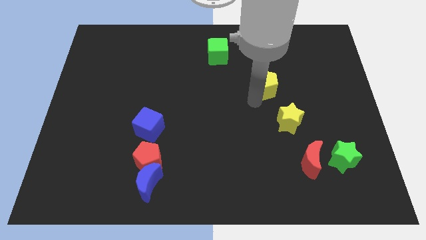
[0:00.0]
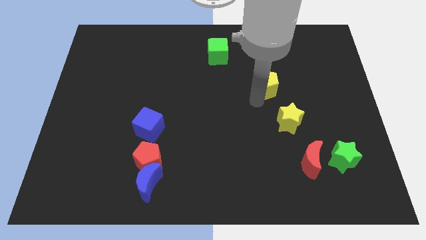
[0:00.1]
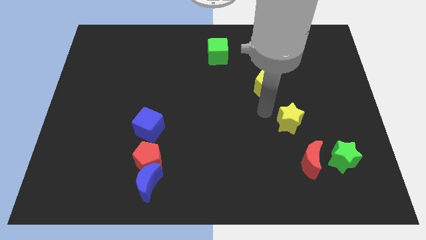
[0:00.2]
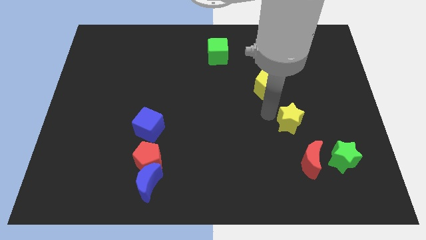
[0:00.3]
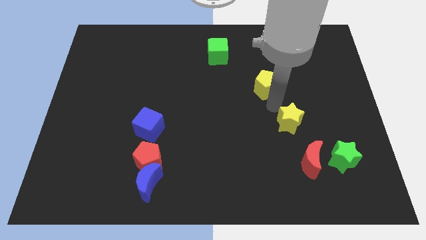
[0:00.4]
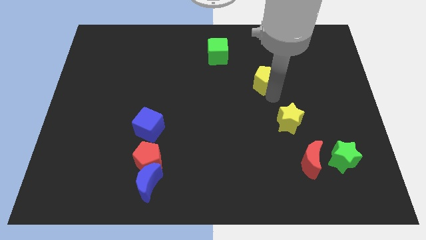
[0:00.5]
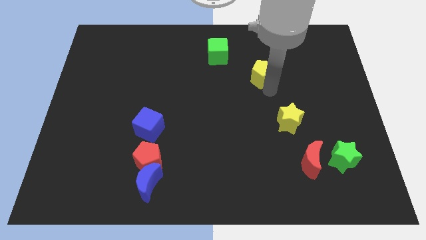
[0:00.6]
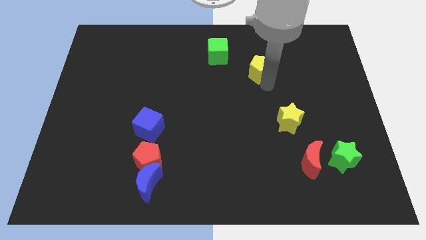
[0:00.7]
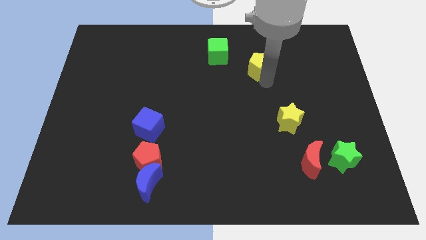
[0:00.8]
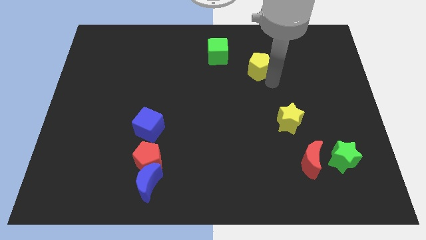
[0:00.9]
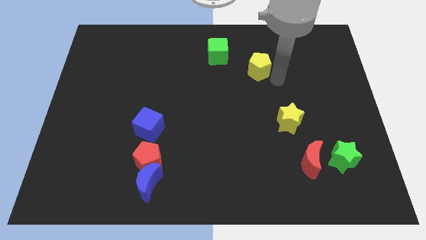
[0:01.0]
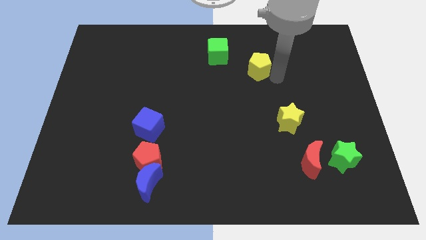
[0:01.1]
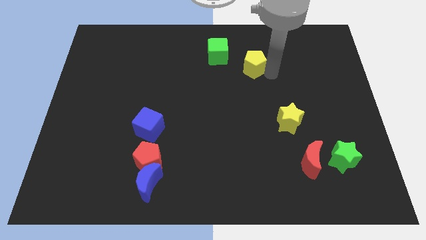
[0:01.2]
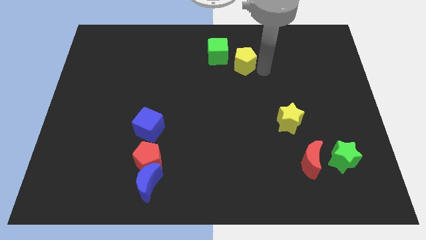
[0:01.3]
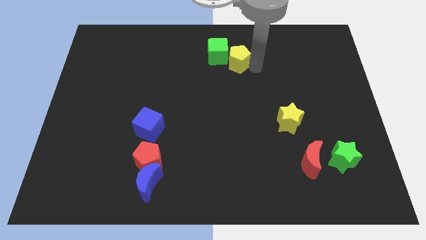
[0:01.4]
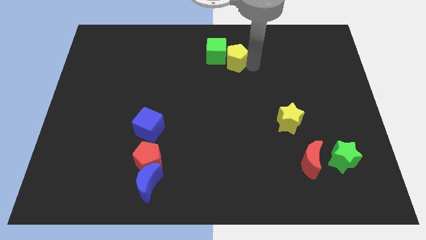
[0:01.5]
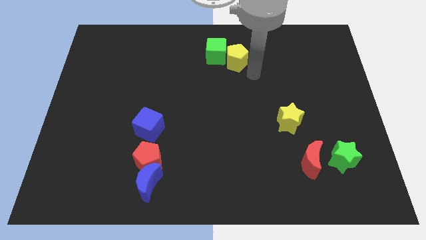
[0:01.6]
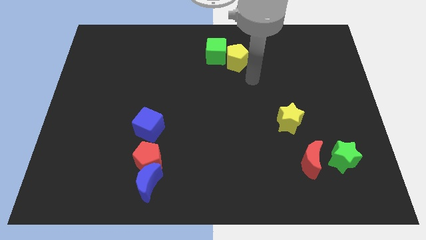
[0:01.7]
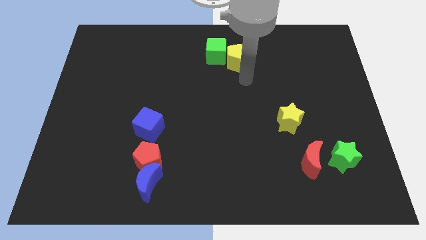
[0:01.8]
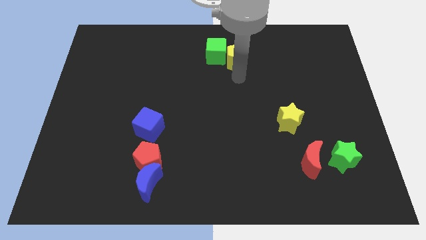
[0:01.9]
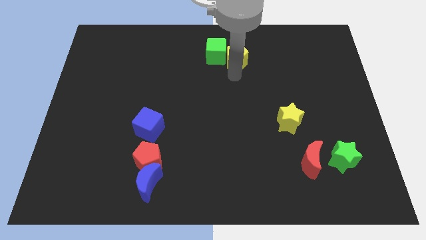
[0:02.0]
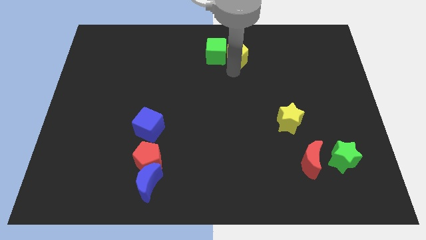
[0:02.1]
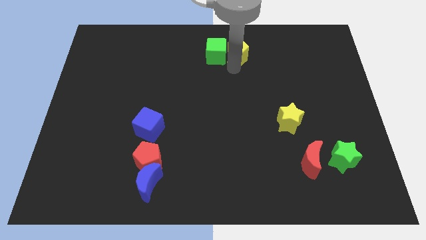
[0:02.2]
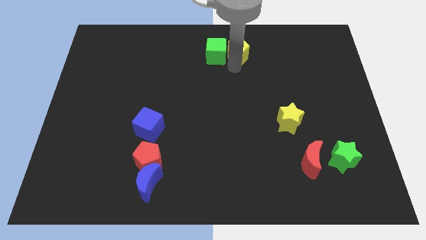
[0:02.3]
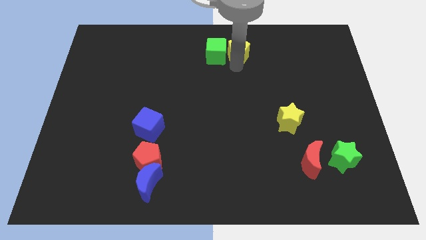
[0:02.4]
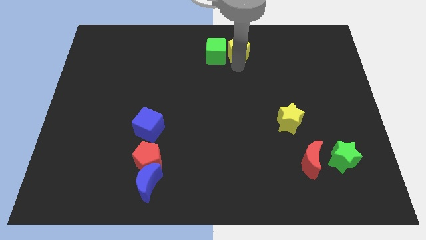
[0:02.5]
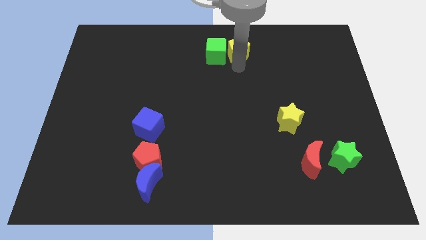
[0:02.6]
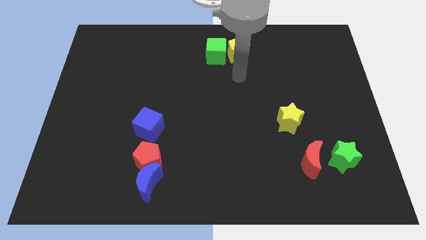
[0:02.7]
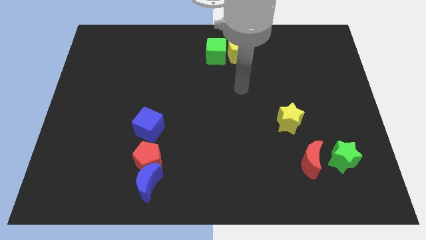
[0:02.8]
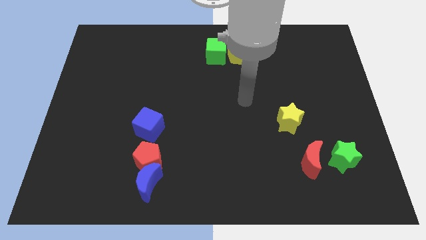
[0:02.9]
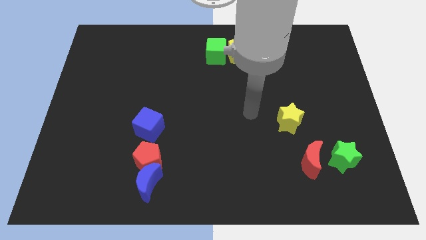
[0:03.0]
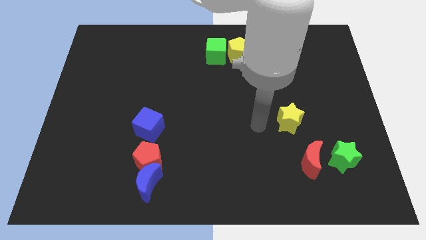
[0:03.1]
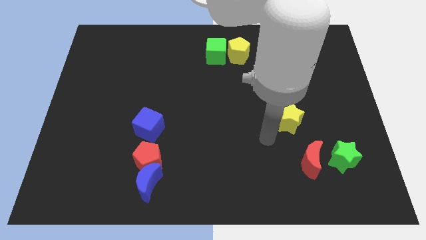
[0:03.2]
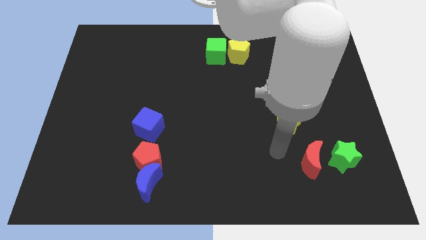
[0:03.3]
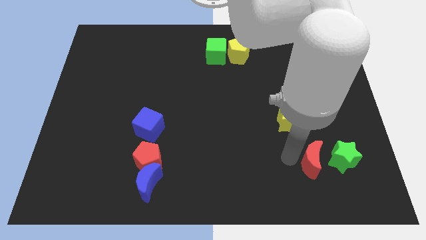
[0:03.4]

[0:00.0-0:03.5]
move yellow pentagon right to the green cube

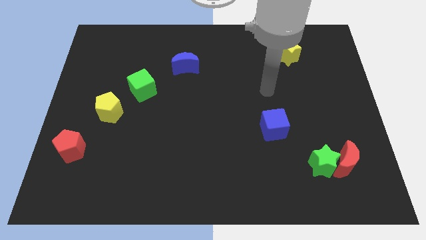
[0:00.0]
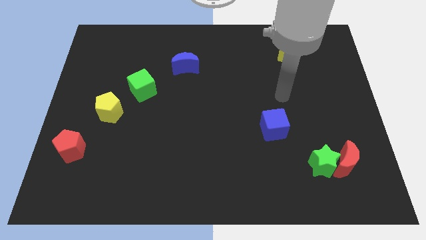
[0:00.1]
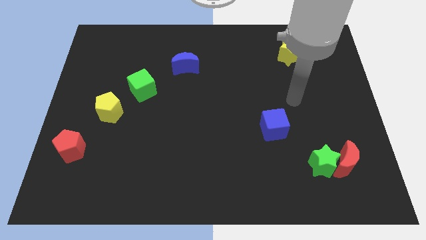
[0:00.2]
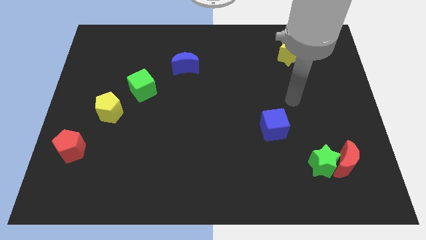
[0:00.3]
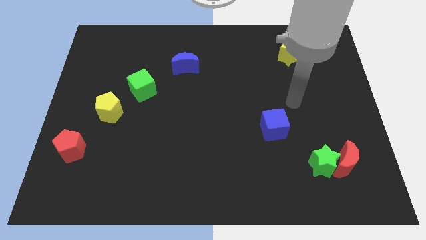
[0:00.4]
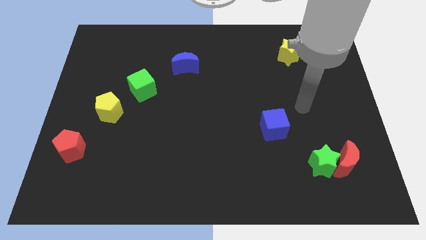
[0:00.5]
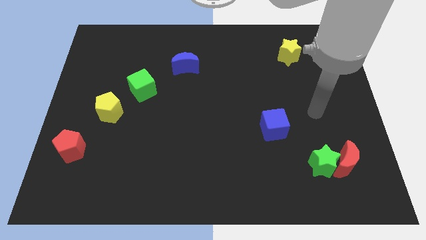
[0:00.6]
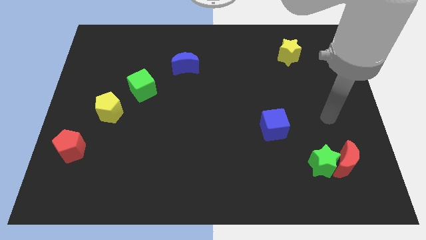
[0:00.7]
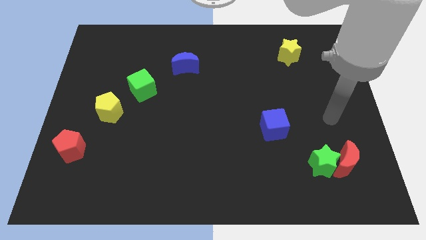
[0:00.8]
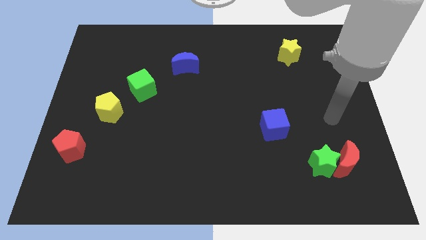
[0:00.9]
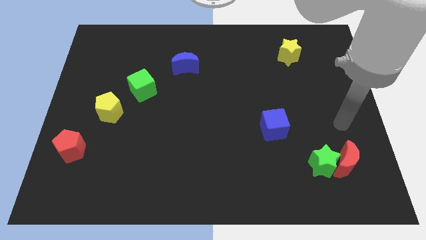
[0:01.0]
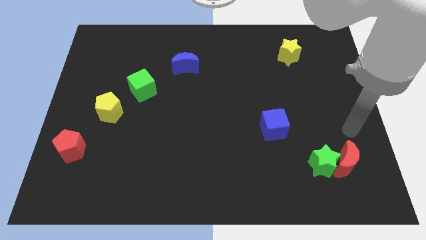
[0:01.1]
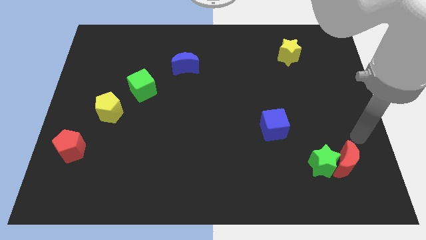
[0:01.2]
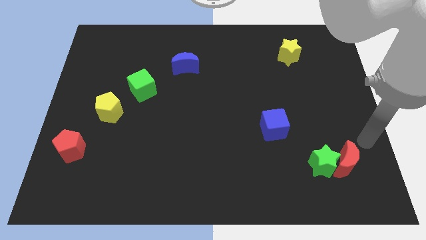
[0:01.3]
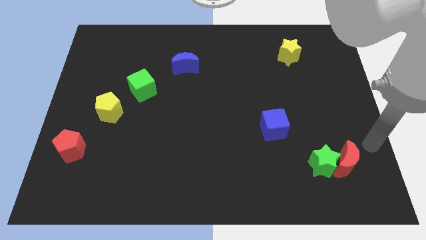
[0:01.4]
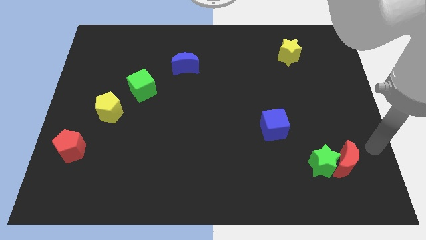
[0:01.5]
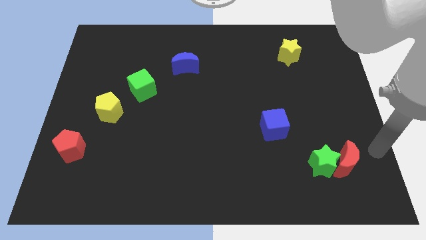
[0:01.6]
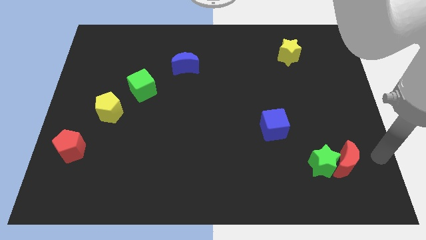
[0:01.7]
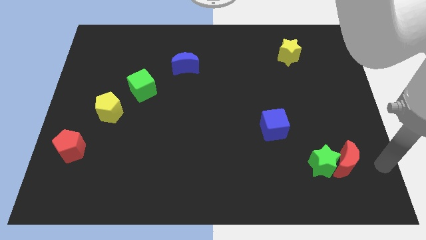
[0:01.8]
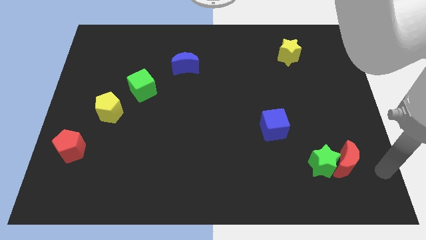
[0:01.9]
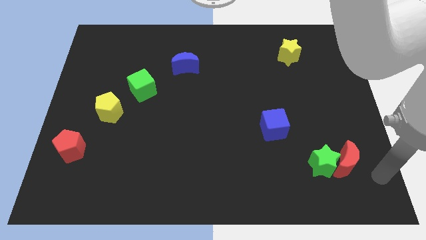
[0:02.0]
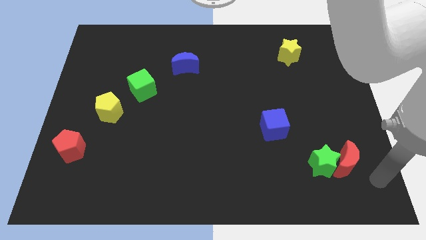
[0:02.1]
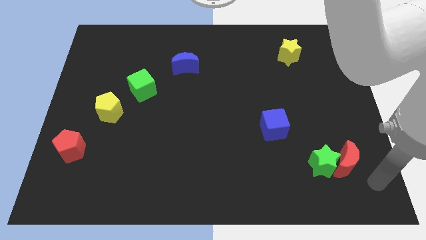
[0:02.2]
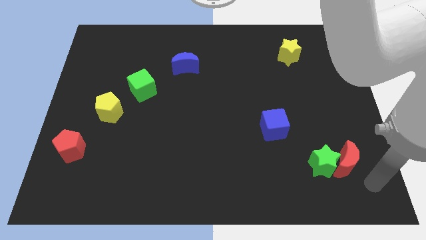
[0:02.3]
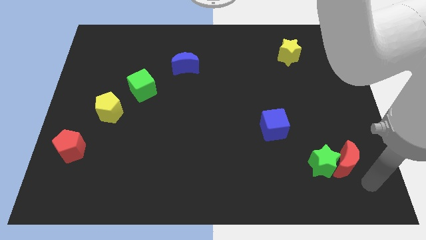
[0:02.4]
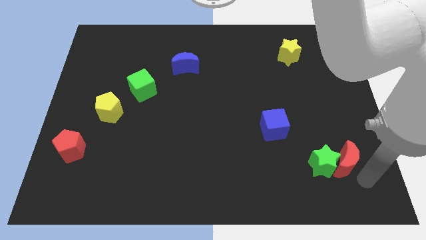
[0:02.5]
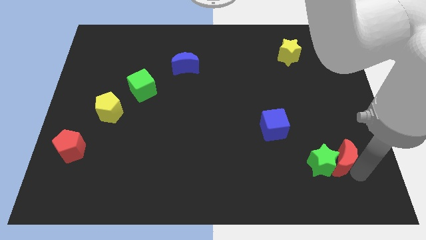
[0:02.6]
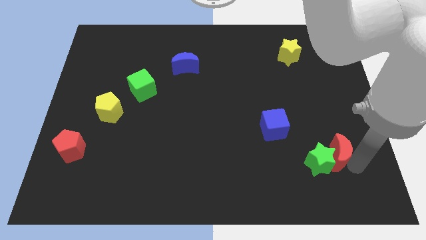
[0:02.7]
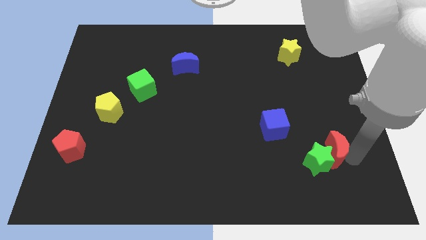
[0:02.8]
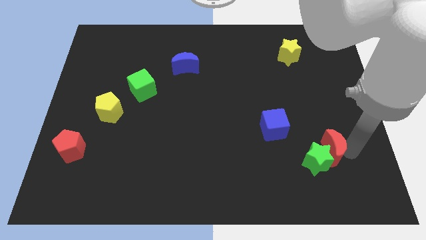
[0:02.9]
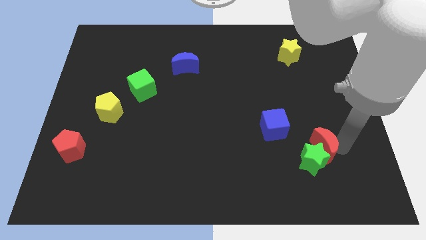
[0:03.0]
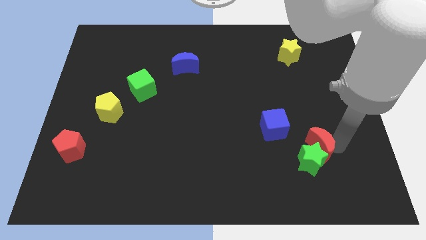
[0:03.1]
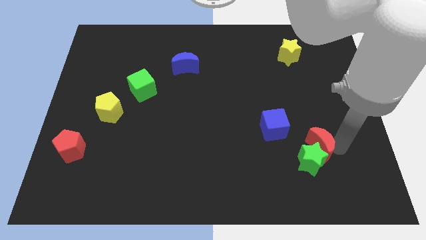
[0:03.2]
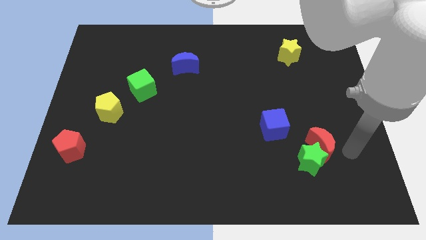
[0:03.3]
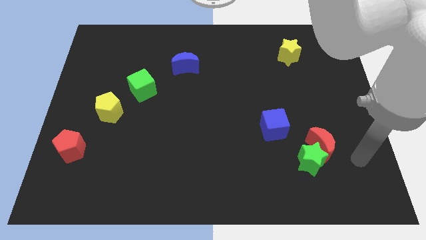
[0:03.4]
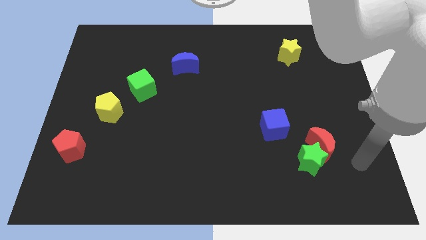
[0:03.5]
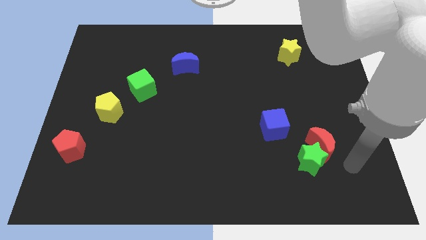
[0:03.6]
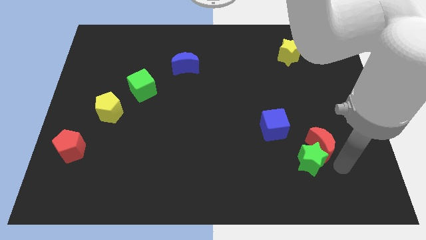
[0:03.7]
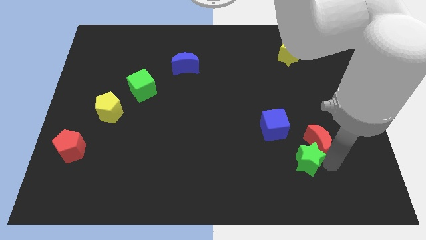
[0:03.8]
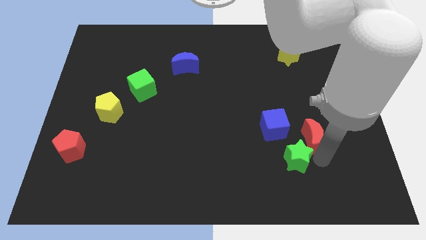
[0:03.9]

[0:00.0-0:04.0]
push red moon in to green star

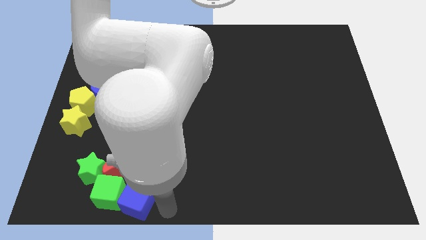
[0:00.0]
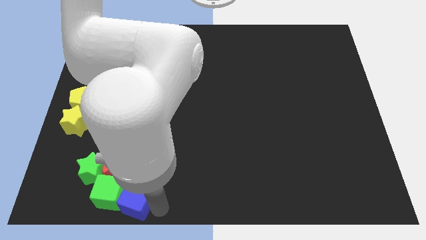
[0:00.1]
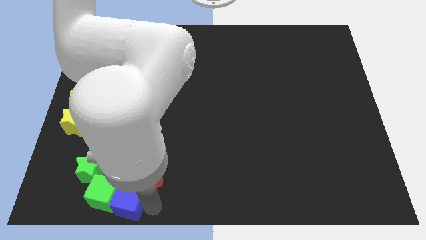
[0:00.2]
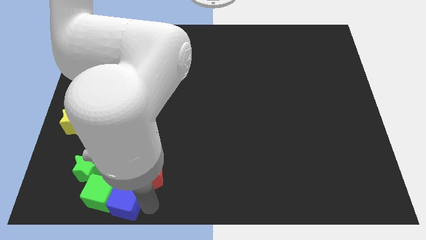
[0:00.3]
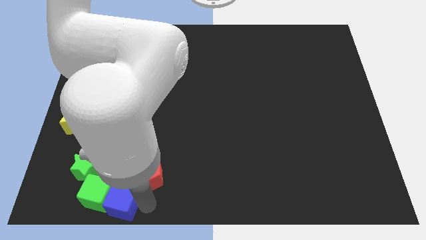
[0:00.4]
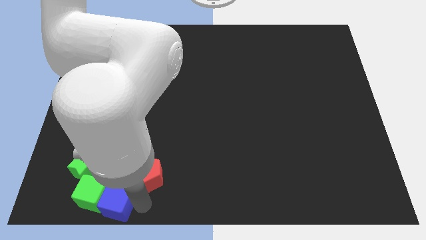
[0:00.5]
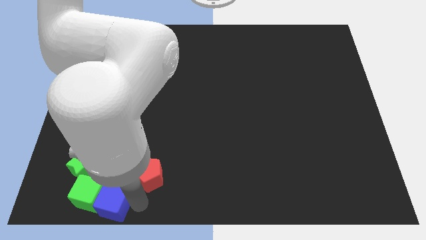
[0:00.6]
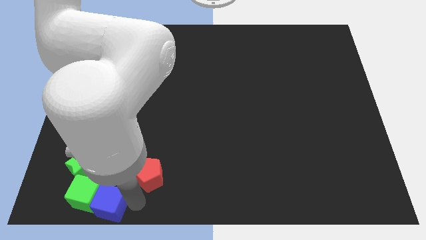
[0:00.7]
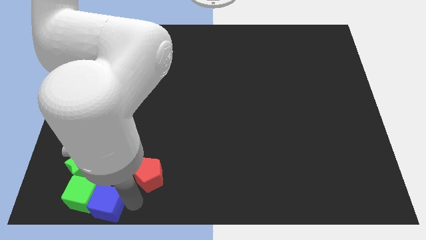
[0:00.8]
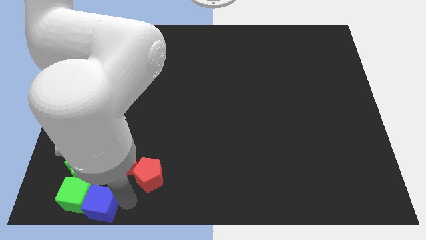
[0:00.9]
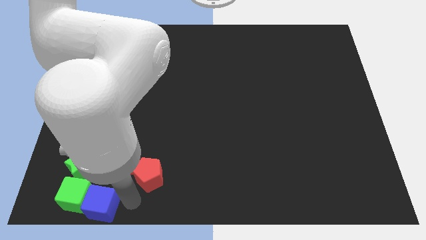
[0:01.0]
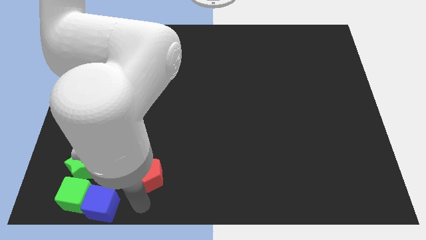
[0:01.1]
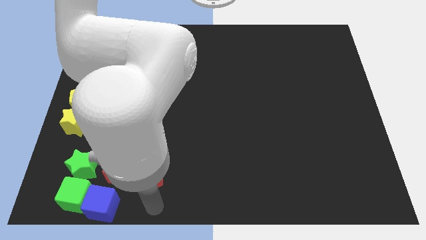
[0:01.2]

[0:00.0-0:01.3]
move the group of blocks towards the bottom left of the table
